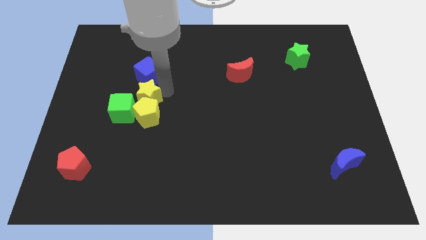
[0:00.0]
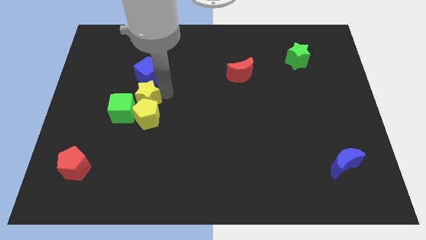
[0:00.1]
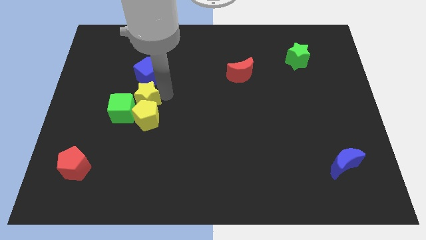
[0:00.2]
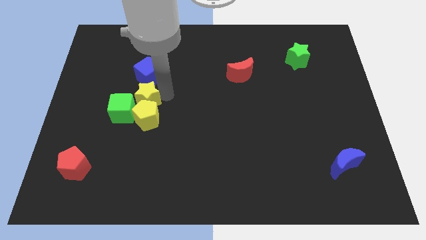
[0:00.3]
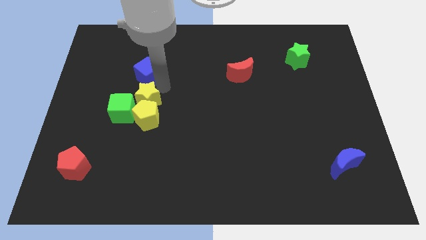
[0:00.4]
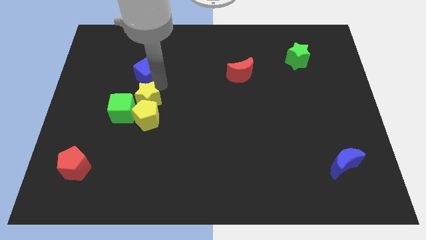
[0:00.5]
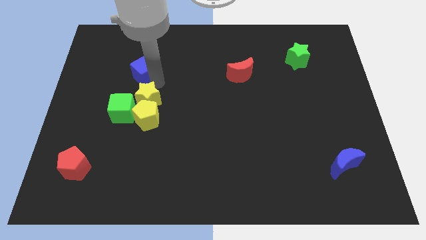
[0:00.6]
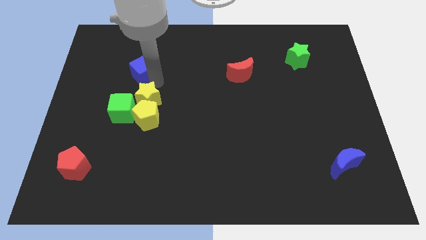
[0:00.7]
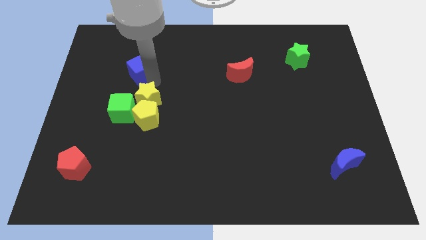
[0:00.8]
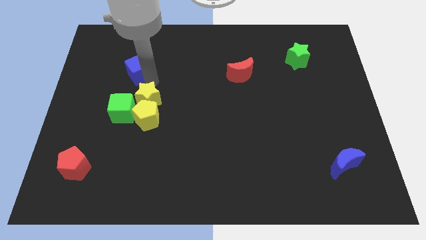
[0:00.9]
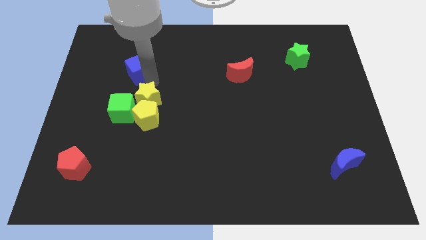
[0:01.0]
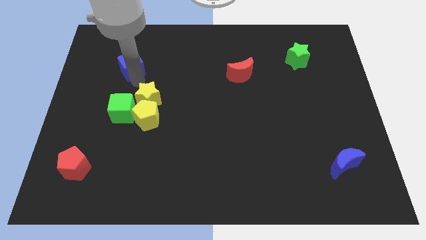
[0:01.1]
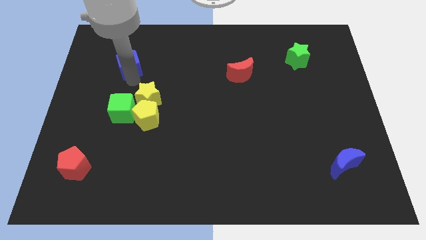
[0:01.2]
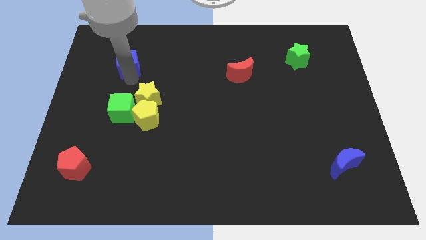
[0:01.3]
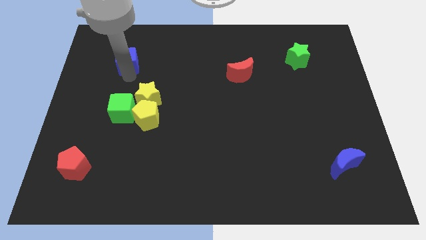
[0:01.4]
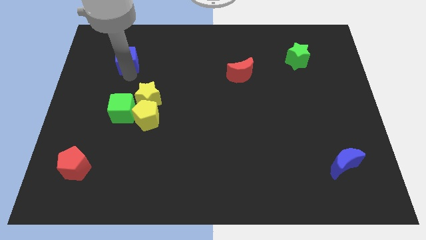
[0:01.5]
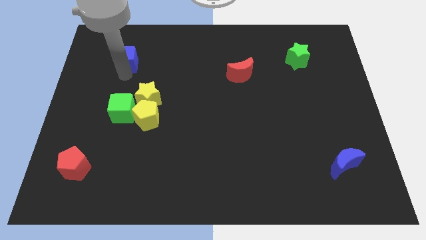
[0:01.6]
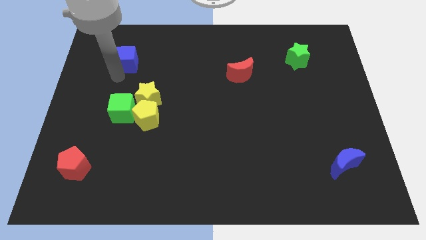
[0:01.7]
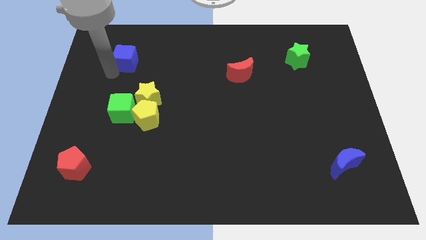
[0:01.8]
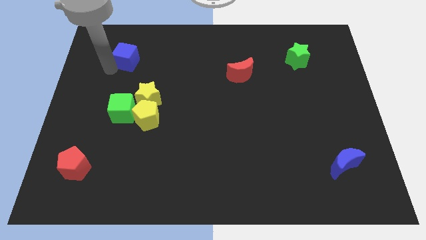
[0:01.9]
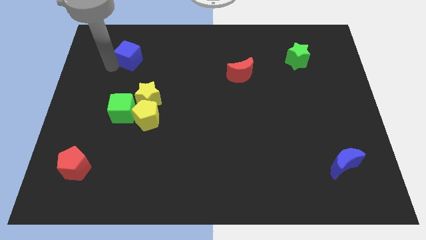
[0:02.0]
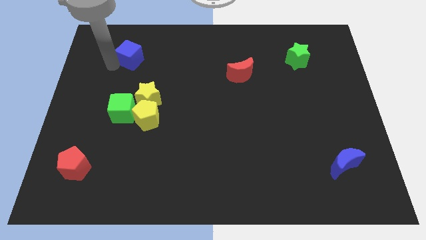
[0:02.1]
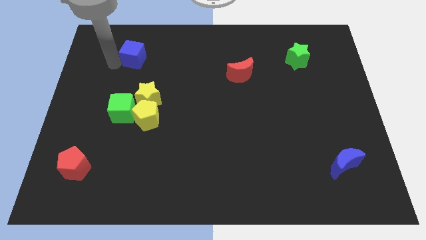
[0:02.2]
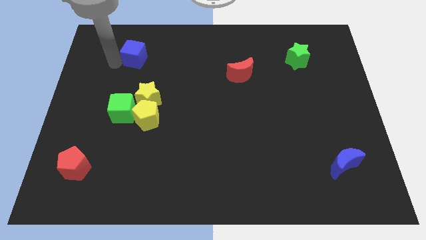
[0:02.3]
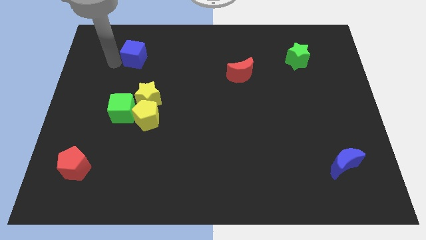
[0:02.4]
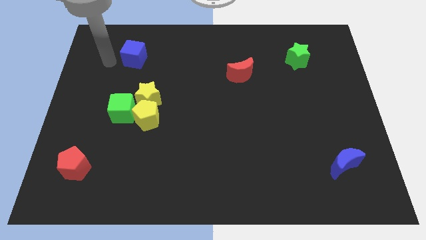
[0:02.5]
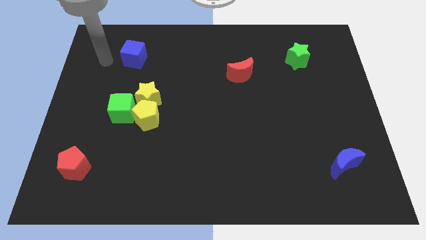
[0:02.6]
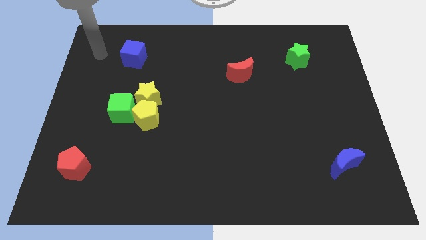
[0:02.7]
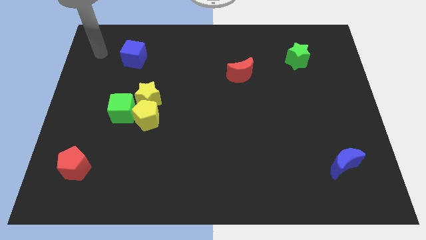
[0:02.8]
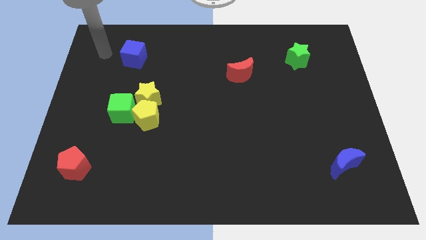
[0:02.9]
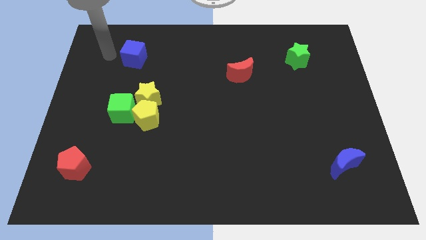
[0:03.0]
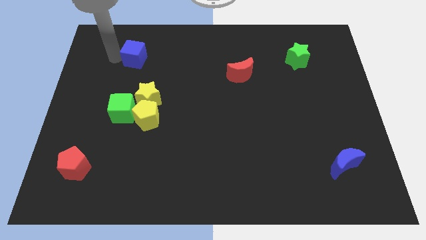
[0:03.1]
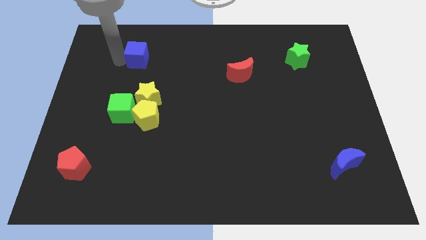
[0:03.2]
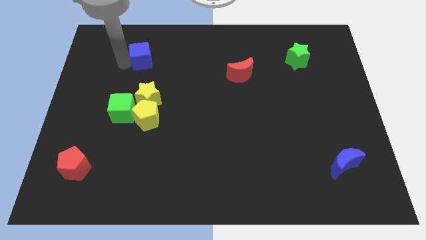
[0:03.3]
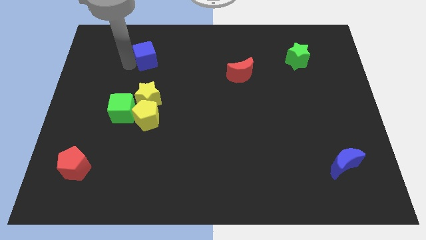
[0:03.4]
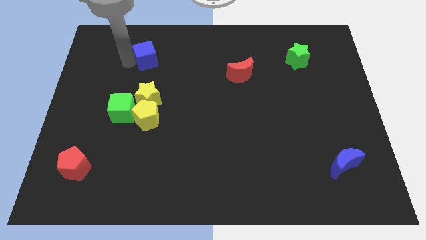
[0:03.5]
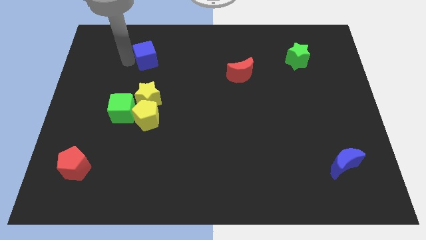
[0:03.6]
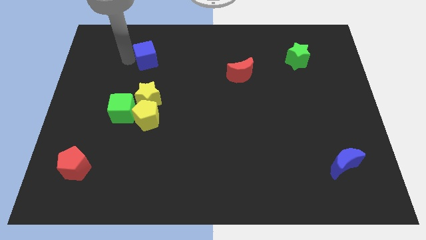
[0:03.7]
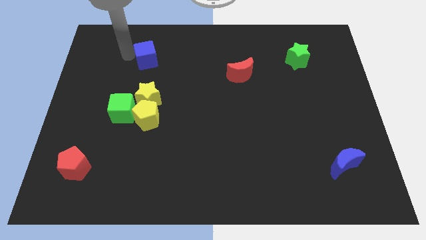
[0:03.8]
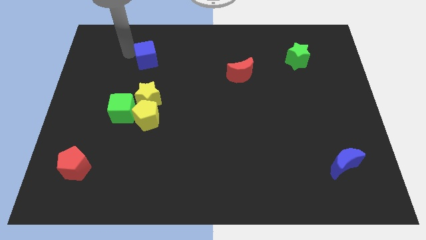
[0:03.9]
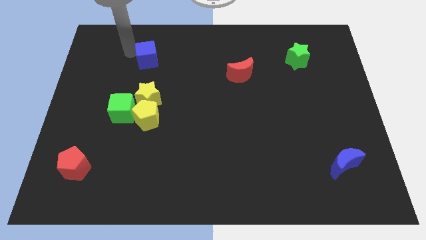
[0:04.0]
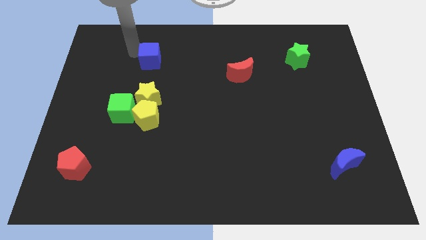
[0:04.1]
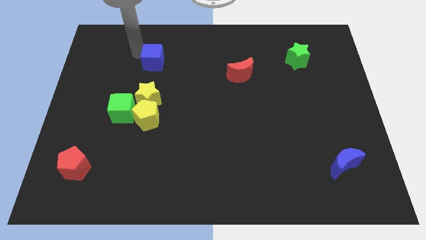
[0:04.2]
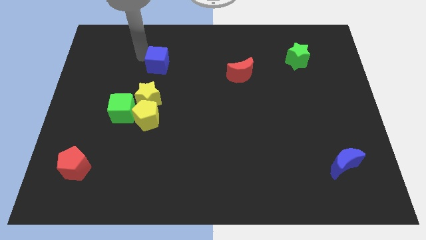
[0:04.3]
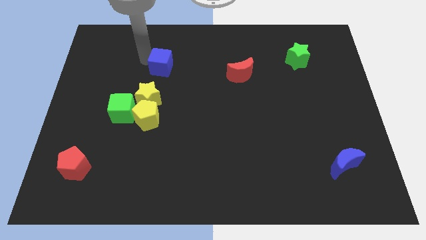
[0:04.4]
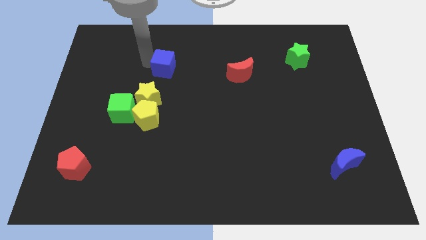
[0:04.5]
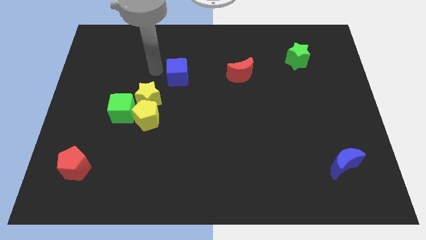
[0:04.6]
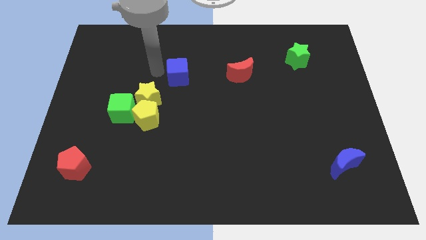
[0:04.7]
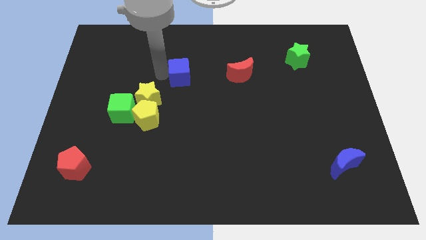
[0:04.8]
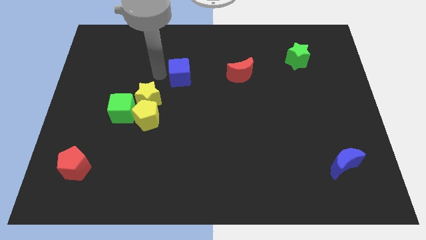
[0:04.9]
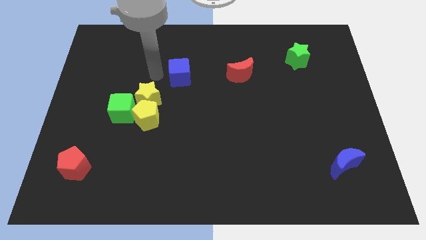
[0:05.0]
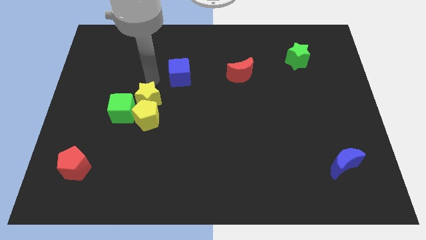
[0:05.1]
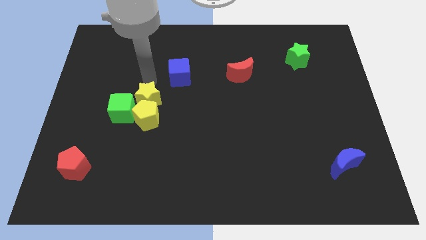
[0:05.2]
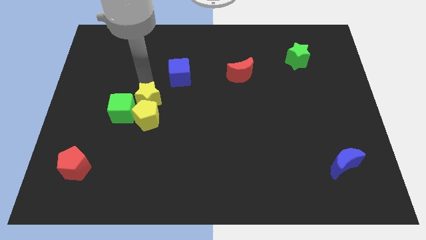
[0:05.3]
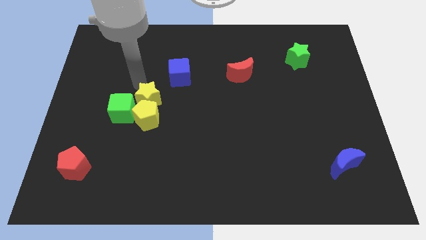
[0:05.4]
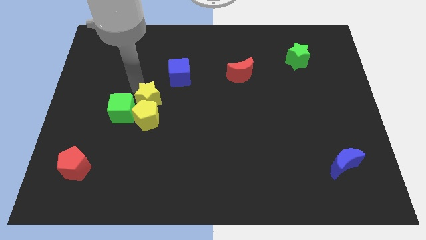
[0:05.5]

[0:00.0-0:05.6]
place the blue cube left to the red moon

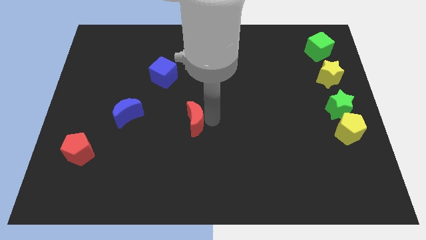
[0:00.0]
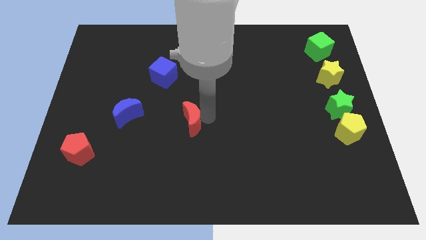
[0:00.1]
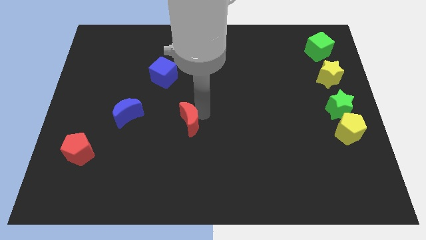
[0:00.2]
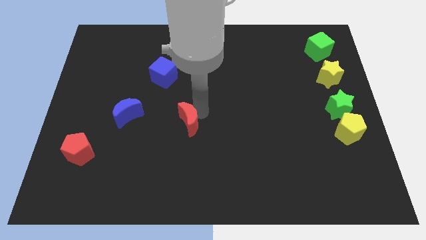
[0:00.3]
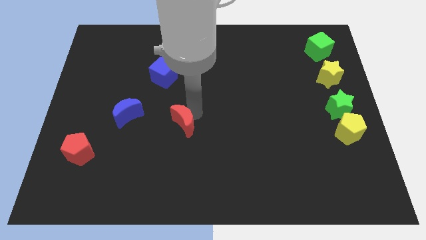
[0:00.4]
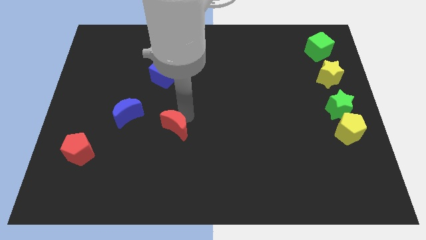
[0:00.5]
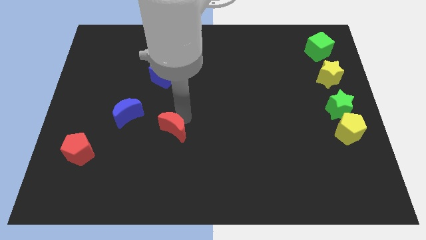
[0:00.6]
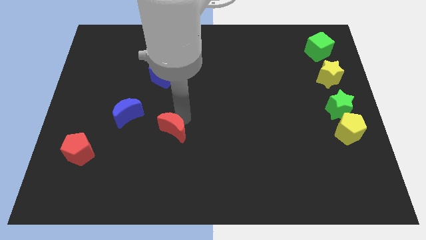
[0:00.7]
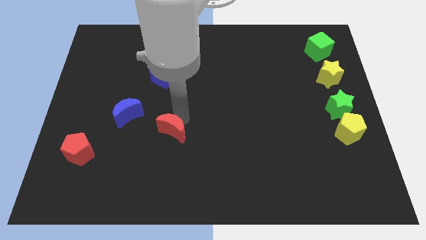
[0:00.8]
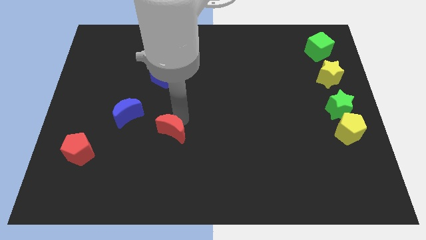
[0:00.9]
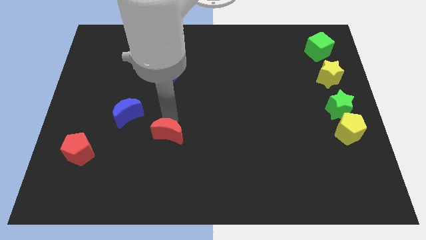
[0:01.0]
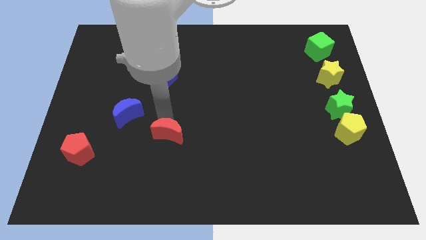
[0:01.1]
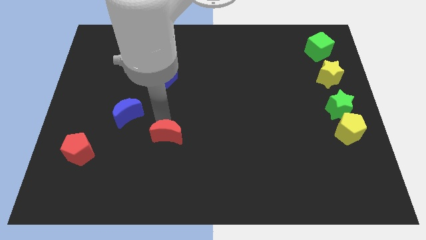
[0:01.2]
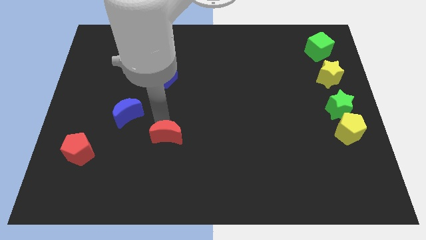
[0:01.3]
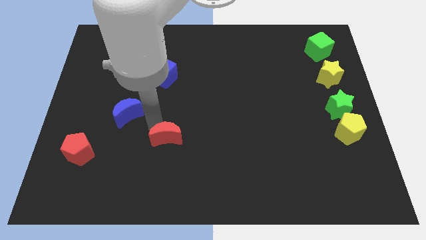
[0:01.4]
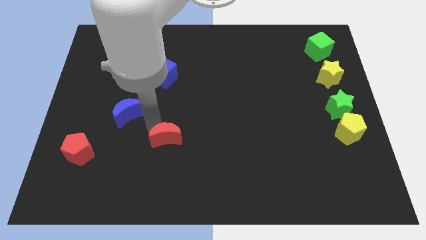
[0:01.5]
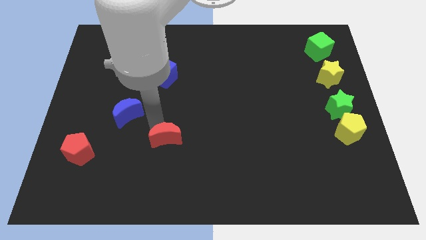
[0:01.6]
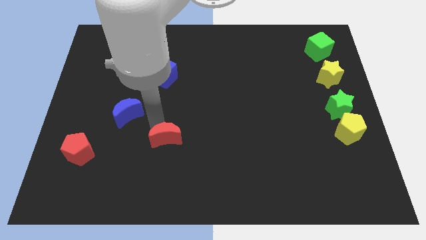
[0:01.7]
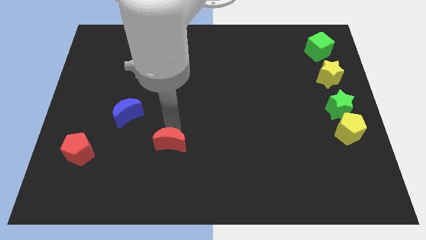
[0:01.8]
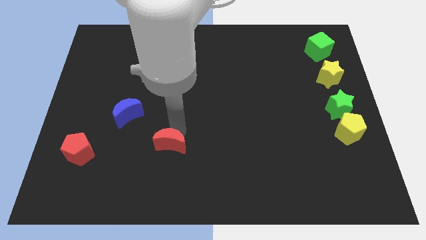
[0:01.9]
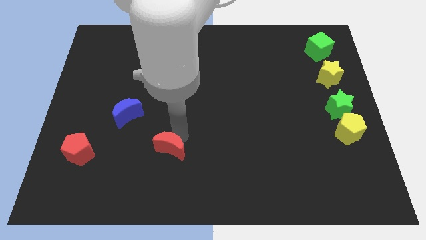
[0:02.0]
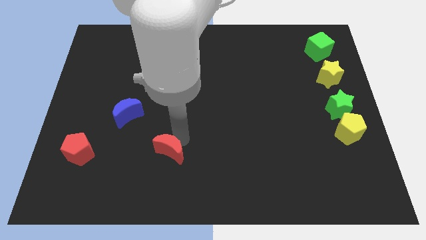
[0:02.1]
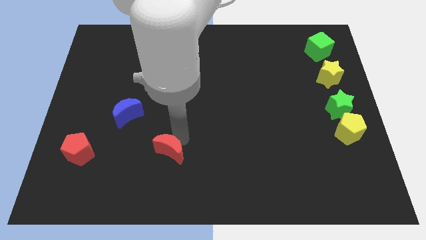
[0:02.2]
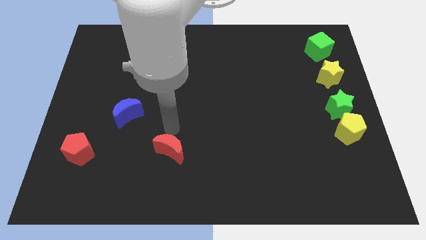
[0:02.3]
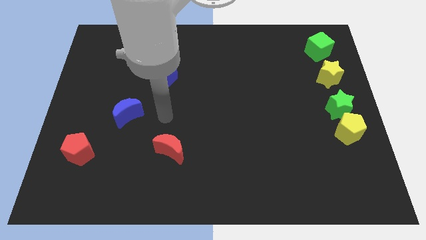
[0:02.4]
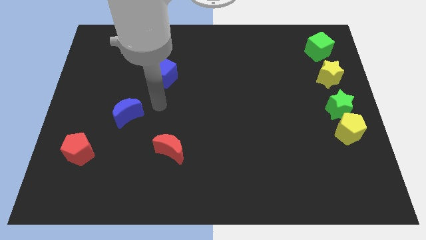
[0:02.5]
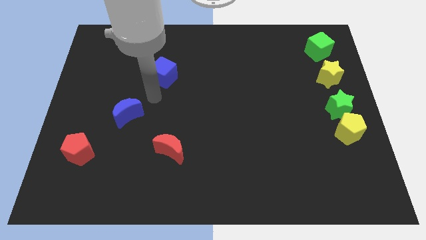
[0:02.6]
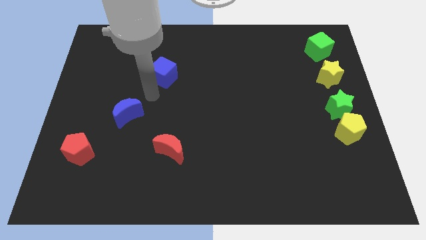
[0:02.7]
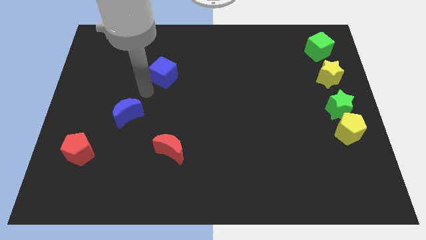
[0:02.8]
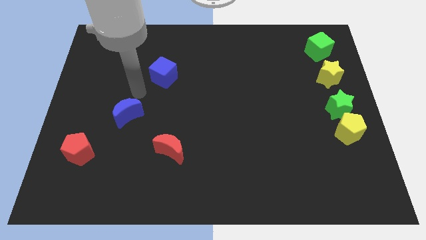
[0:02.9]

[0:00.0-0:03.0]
move your arm away from red moon

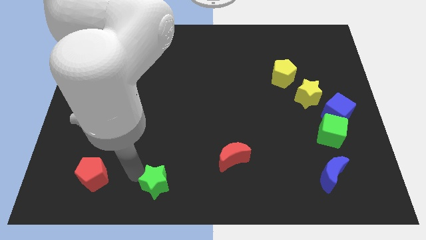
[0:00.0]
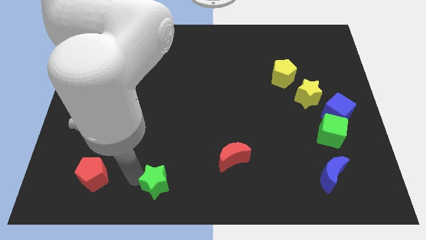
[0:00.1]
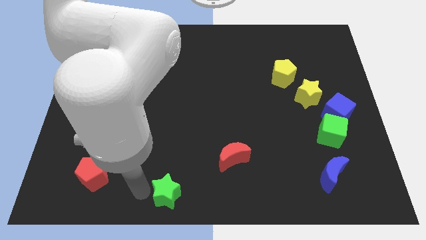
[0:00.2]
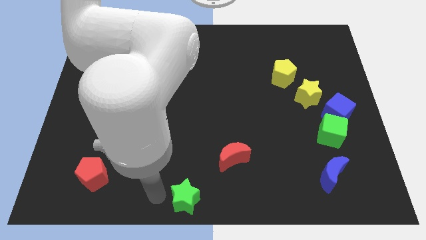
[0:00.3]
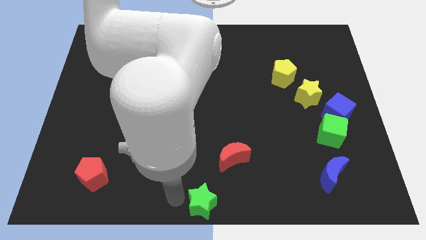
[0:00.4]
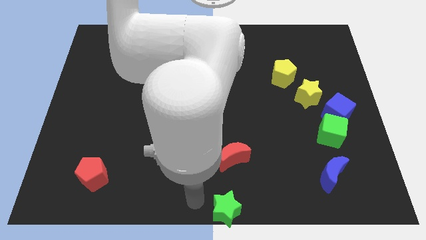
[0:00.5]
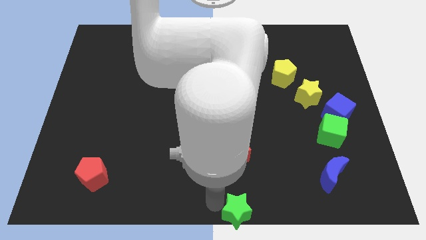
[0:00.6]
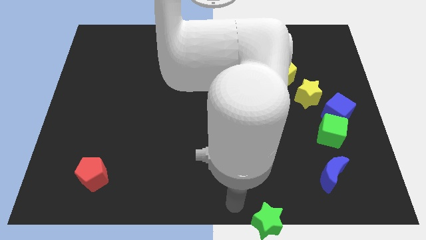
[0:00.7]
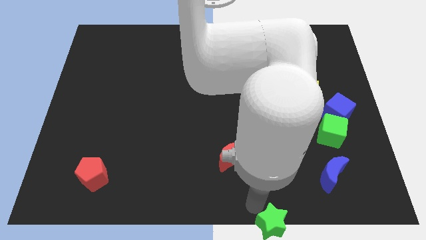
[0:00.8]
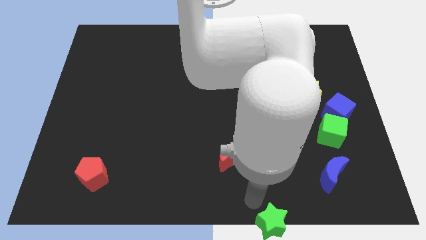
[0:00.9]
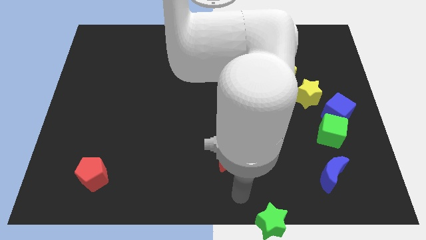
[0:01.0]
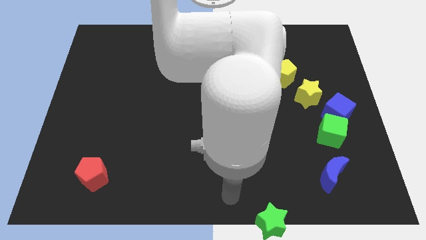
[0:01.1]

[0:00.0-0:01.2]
push the green star diagonally to the blue moon
